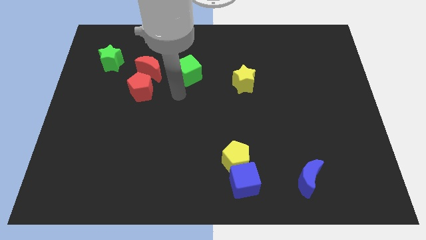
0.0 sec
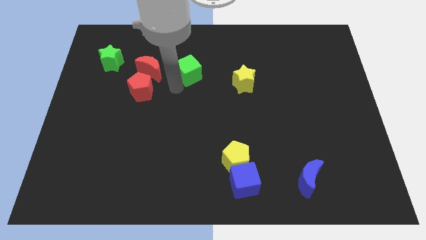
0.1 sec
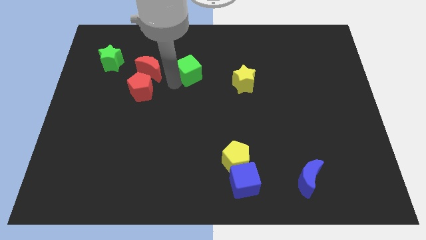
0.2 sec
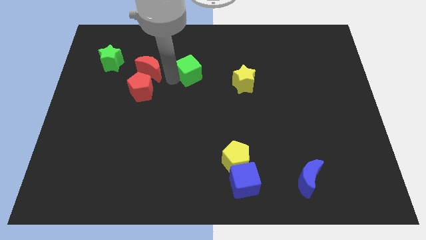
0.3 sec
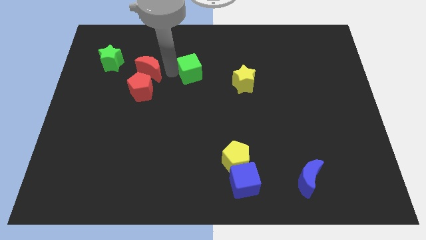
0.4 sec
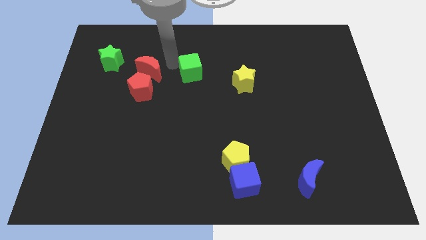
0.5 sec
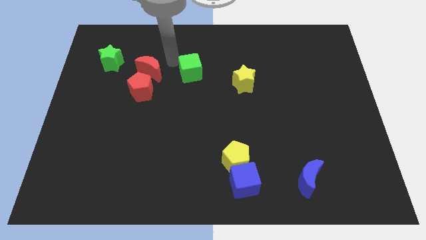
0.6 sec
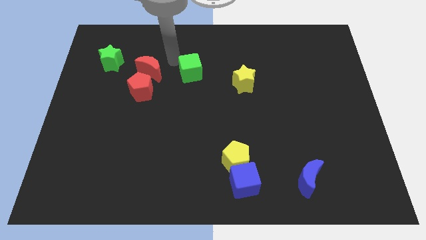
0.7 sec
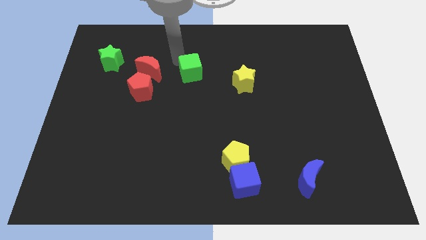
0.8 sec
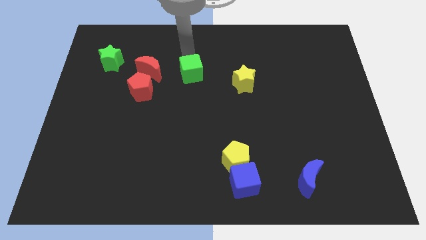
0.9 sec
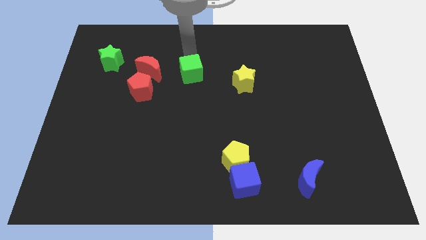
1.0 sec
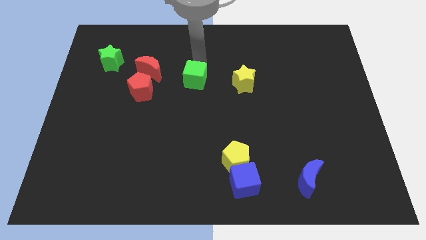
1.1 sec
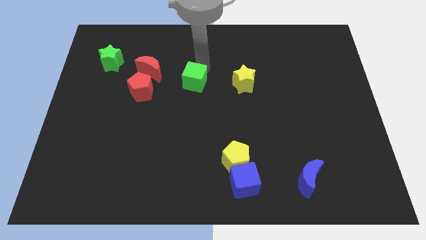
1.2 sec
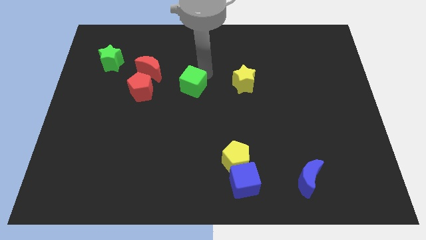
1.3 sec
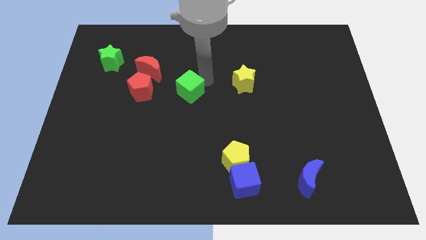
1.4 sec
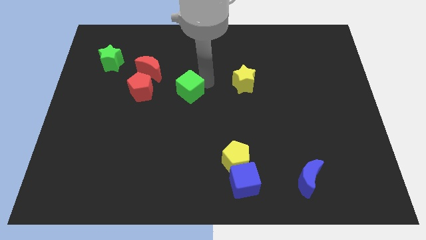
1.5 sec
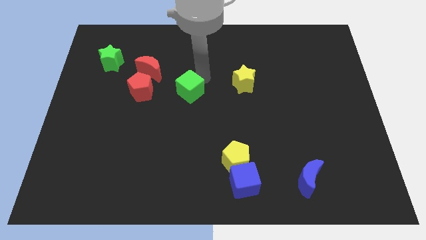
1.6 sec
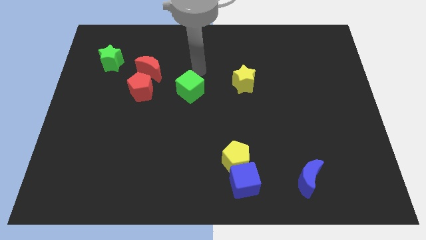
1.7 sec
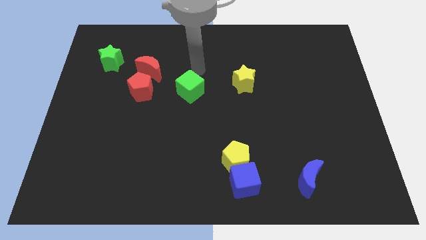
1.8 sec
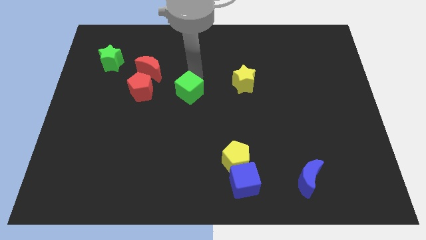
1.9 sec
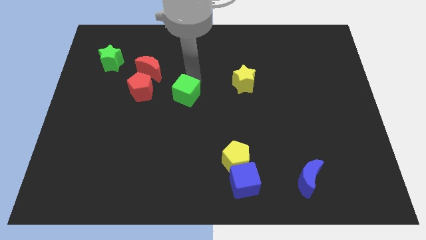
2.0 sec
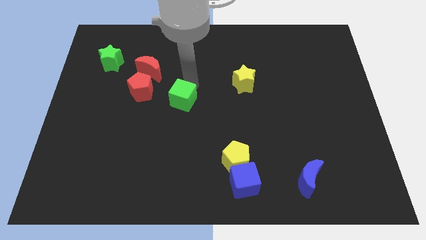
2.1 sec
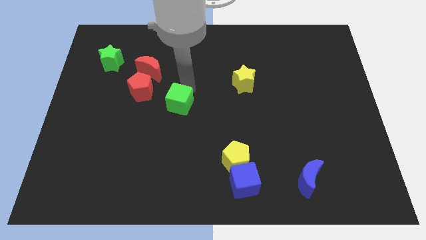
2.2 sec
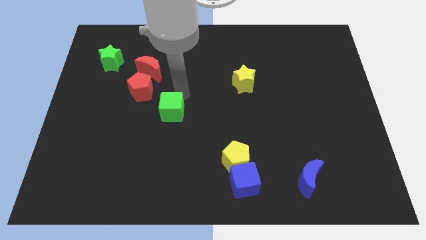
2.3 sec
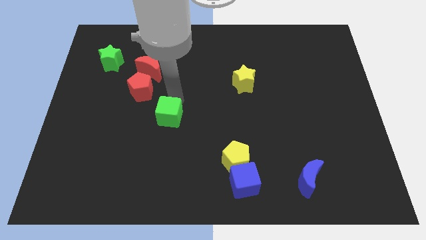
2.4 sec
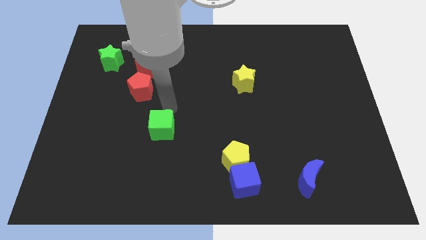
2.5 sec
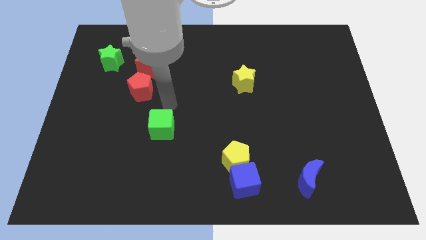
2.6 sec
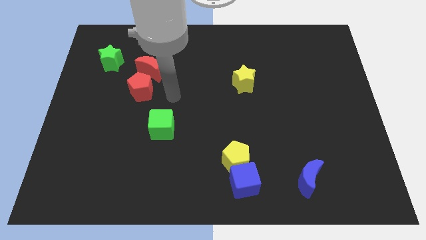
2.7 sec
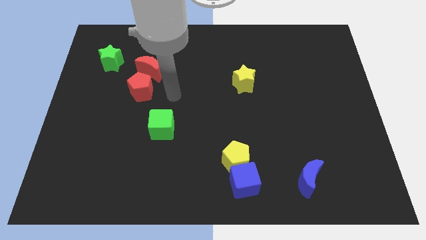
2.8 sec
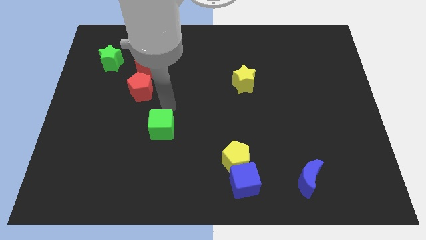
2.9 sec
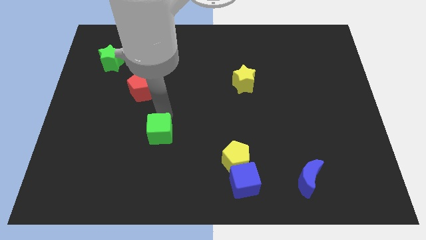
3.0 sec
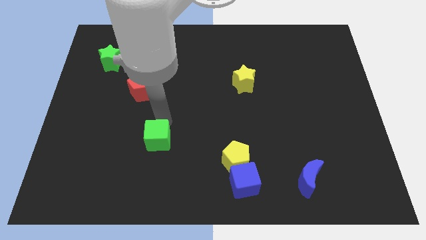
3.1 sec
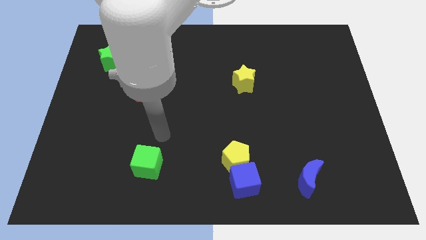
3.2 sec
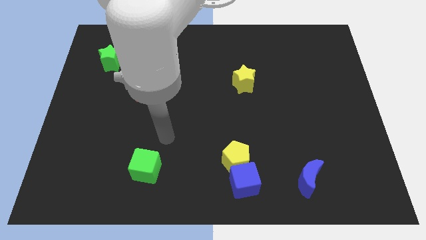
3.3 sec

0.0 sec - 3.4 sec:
move the green cube parallel to the yellow pentagon

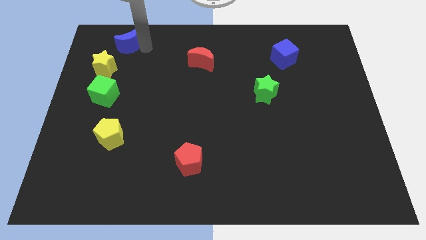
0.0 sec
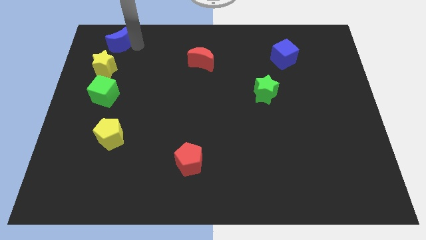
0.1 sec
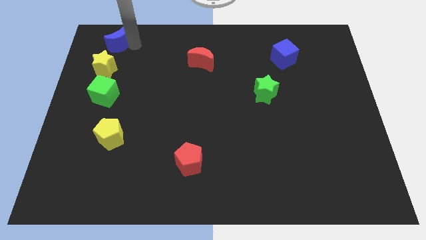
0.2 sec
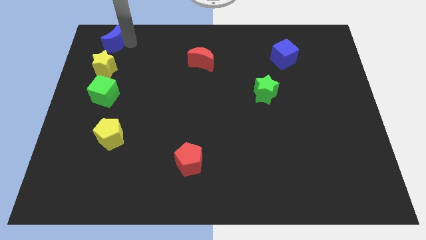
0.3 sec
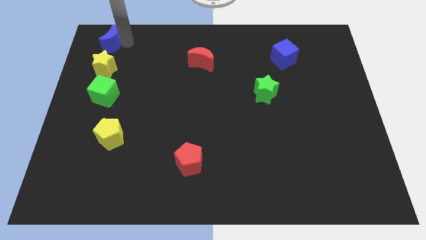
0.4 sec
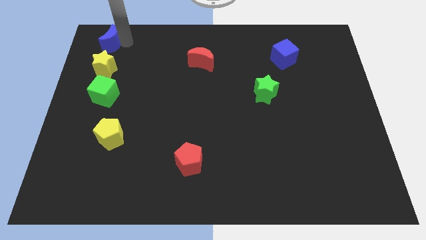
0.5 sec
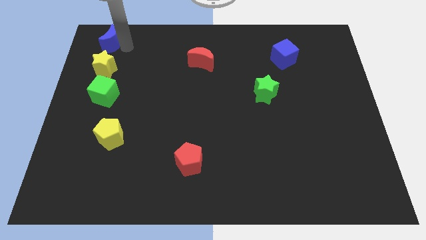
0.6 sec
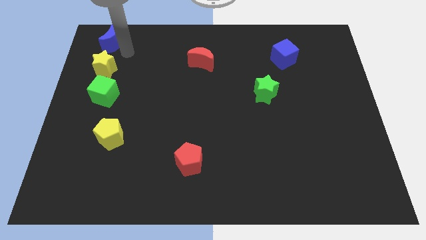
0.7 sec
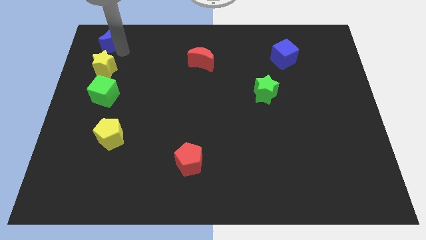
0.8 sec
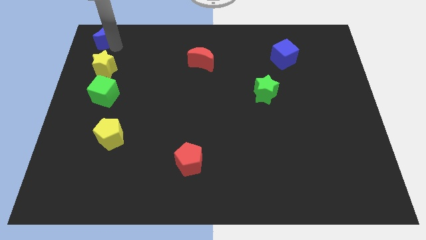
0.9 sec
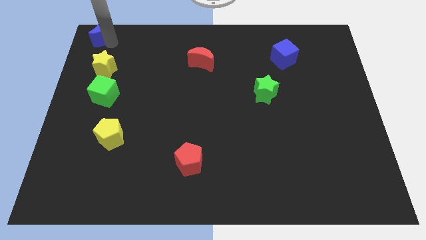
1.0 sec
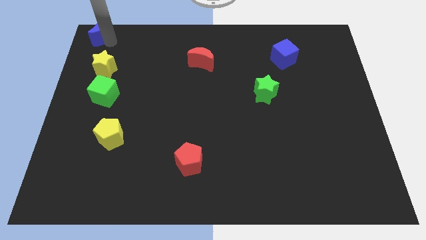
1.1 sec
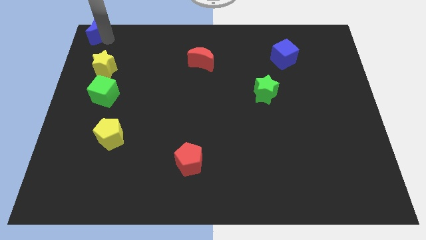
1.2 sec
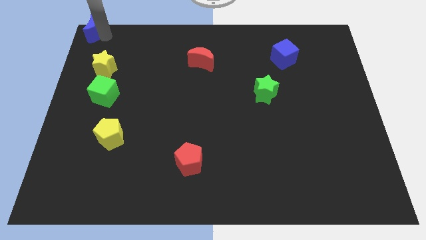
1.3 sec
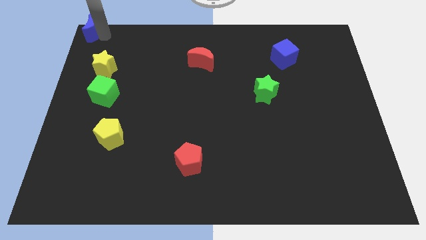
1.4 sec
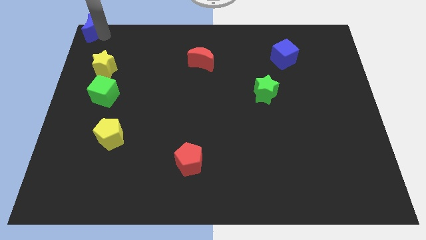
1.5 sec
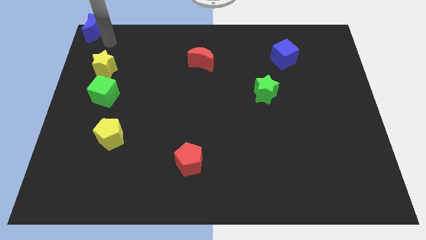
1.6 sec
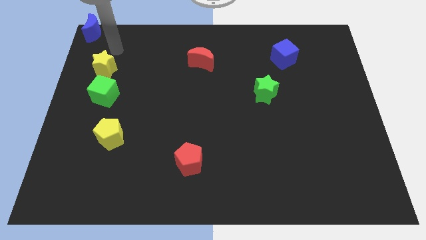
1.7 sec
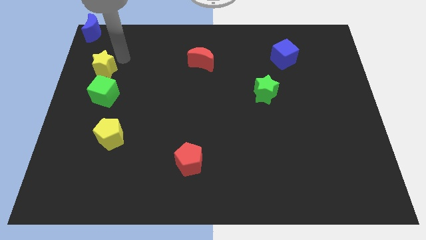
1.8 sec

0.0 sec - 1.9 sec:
push the crescent to the top left of the board

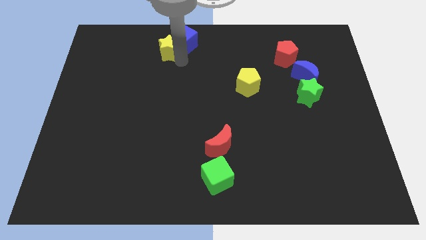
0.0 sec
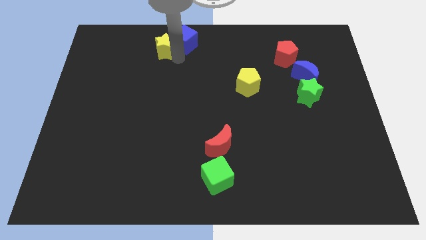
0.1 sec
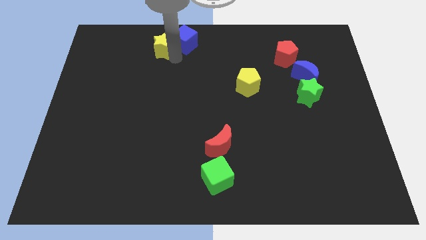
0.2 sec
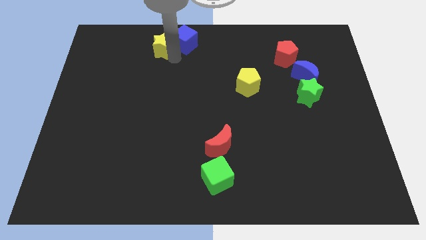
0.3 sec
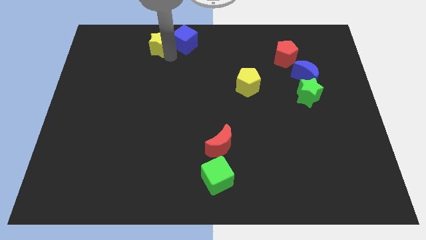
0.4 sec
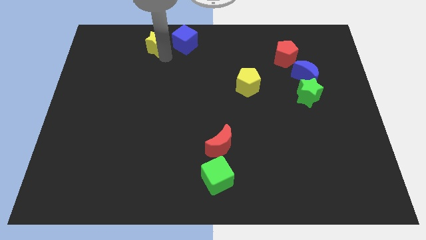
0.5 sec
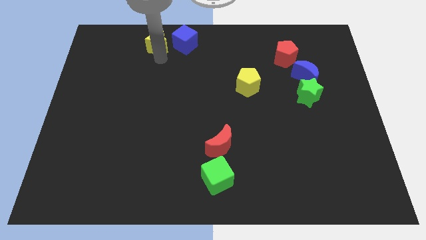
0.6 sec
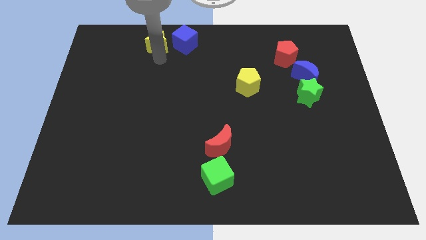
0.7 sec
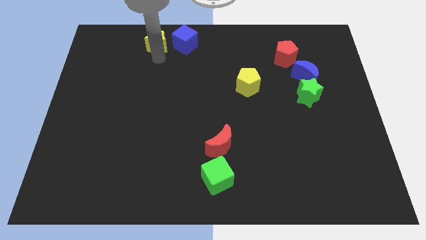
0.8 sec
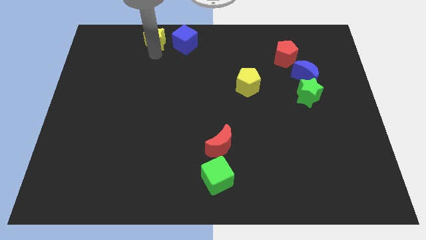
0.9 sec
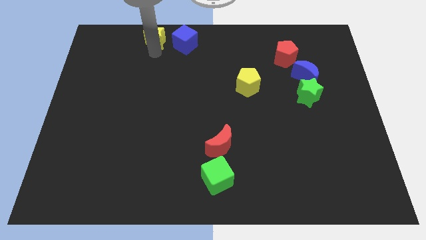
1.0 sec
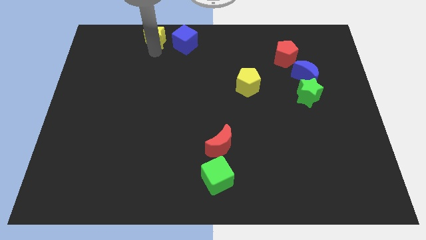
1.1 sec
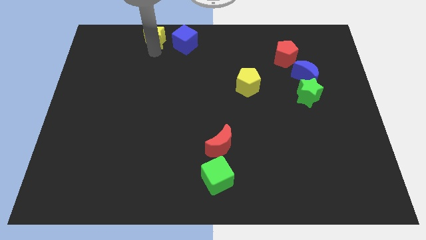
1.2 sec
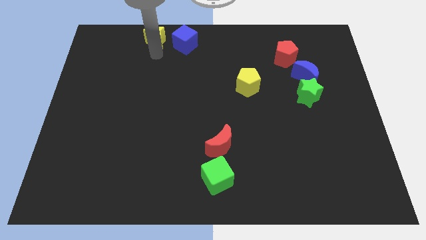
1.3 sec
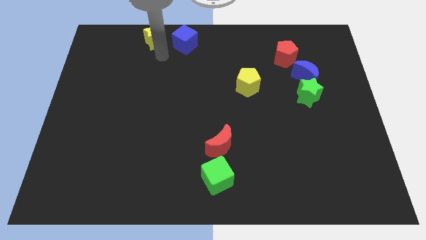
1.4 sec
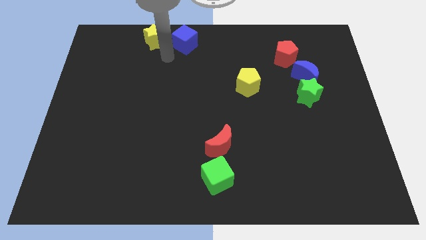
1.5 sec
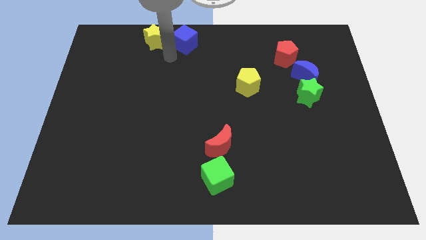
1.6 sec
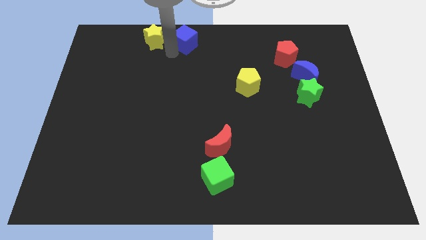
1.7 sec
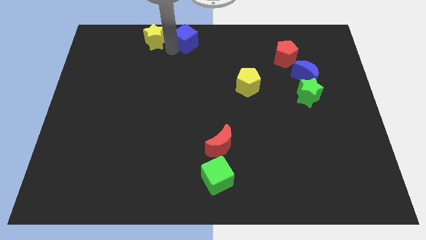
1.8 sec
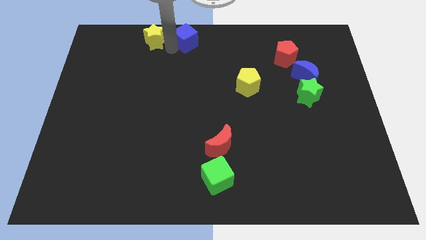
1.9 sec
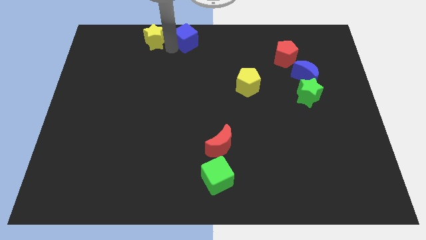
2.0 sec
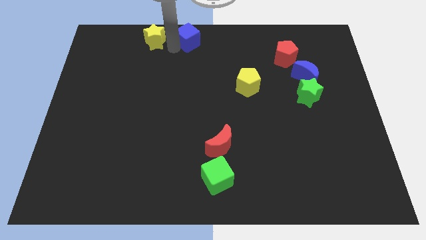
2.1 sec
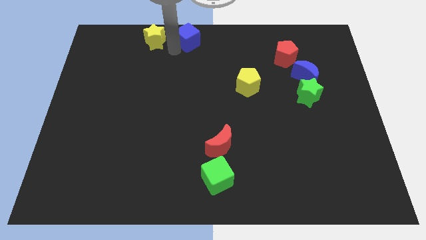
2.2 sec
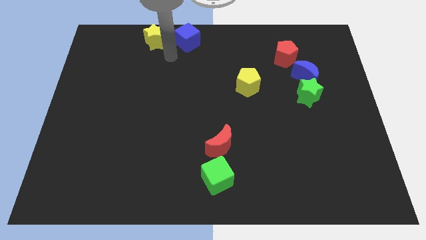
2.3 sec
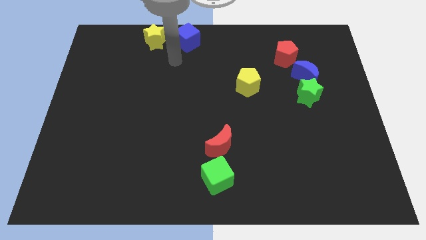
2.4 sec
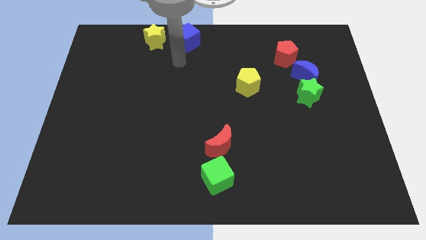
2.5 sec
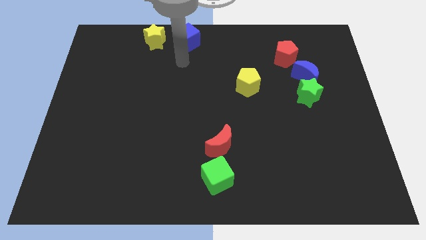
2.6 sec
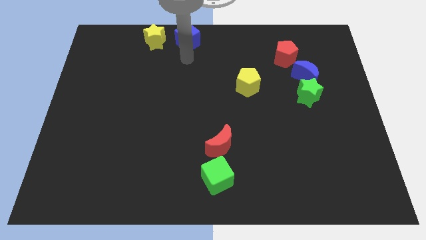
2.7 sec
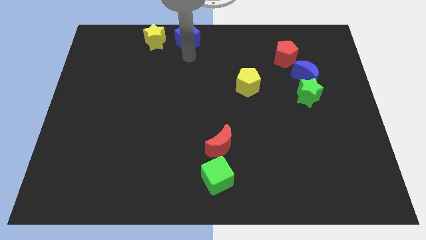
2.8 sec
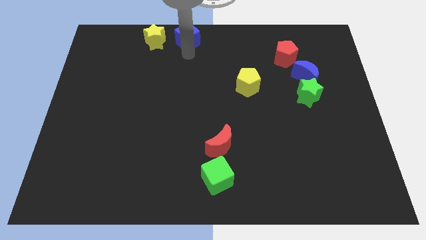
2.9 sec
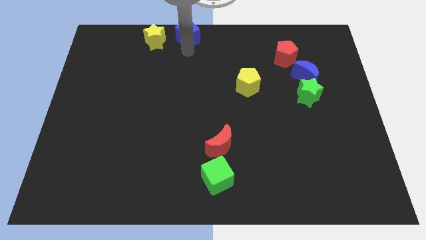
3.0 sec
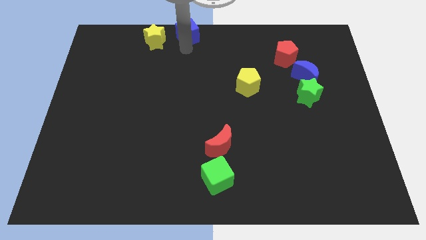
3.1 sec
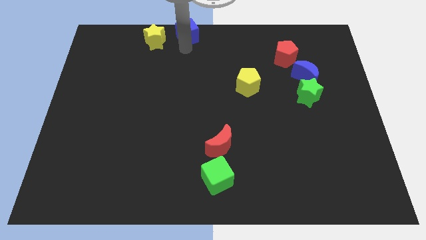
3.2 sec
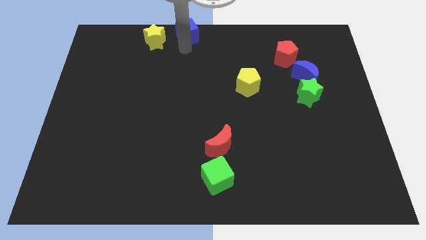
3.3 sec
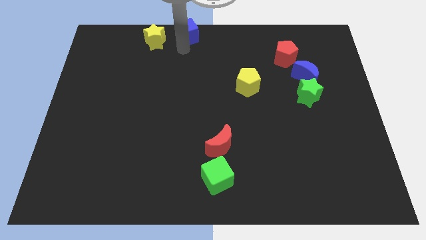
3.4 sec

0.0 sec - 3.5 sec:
move the yellow star and blue cube to the left of the blue cube

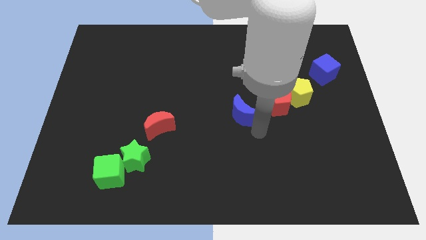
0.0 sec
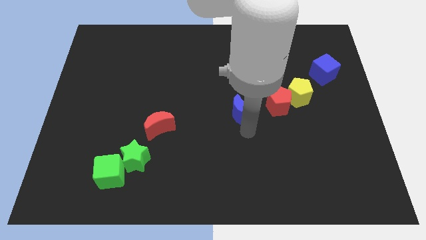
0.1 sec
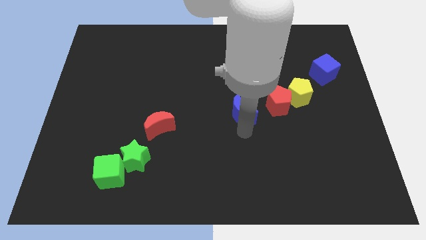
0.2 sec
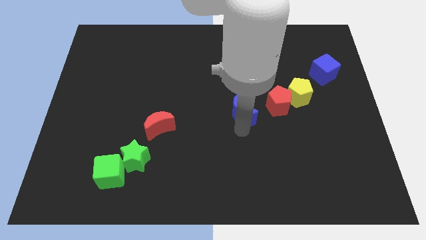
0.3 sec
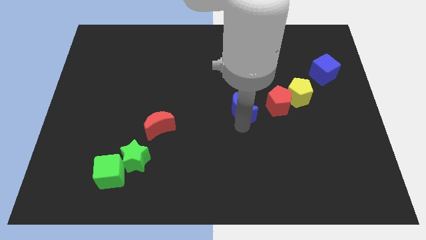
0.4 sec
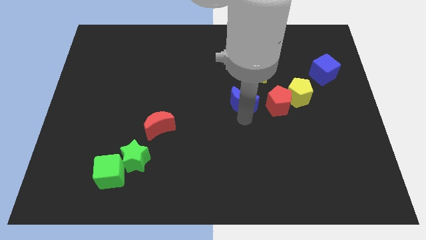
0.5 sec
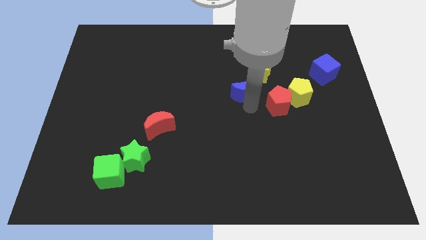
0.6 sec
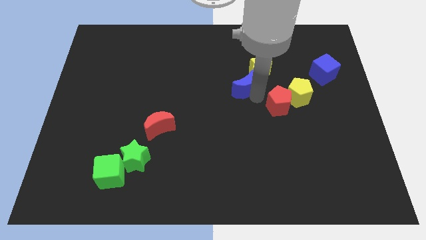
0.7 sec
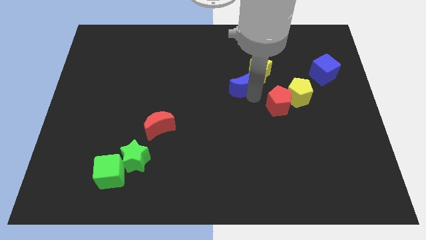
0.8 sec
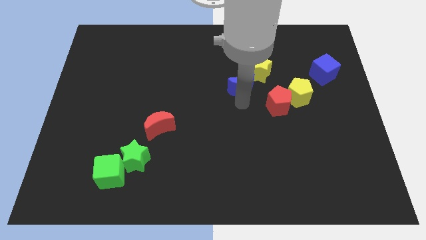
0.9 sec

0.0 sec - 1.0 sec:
push the blue crescent to the bottom left of the yellow star
